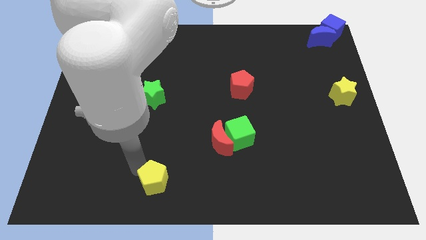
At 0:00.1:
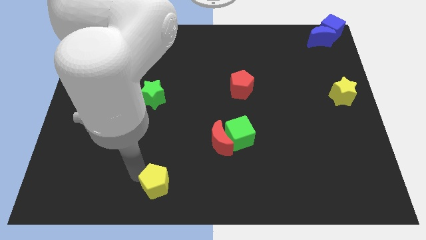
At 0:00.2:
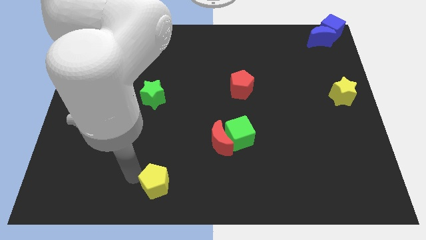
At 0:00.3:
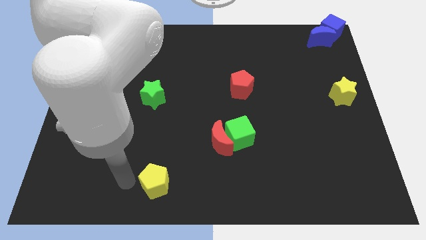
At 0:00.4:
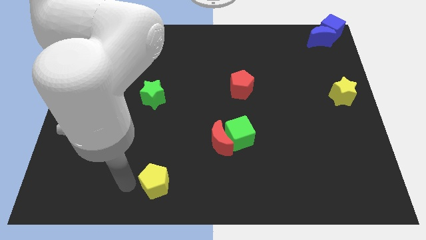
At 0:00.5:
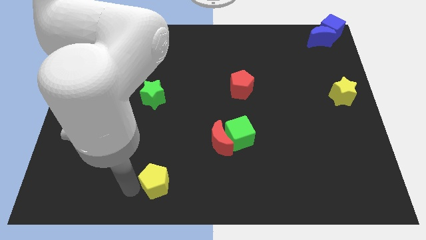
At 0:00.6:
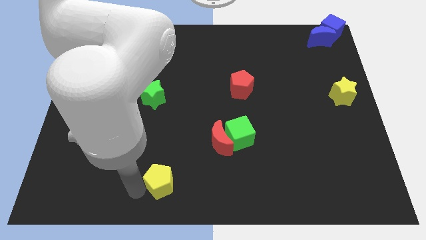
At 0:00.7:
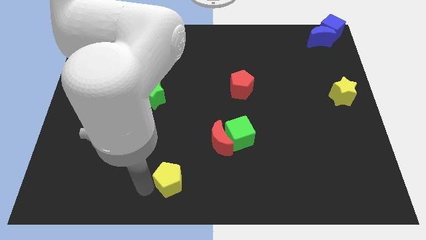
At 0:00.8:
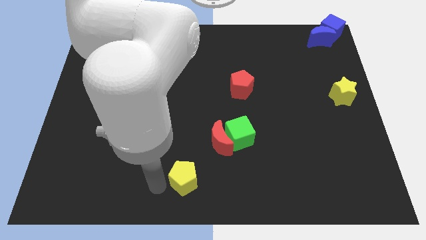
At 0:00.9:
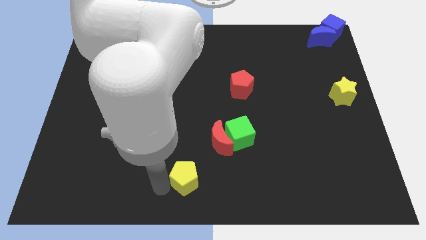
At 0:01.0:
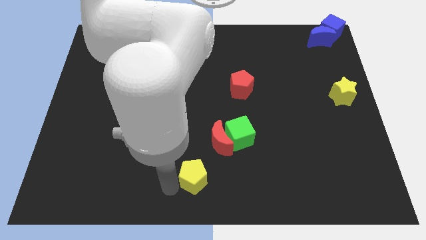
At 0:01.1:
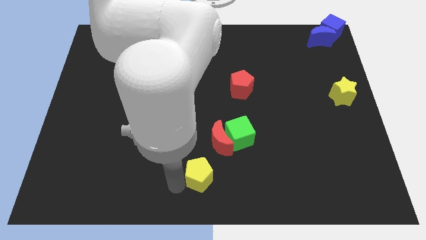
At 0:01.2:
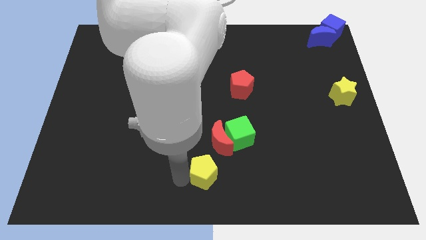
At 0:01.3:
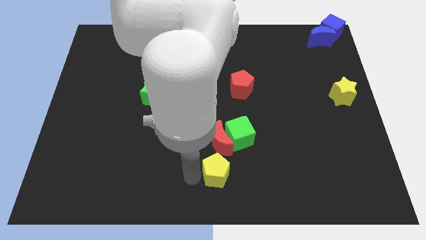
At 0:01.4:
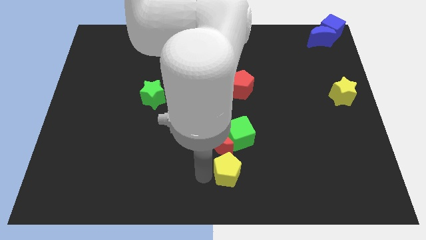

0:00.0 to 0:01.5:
slide the yellow pentagon vertically below the red moon

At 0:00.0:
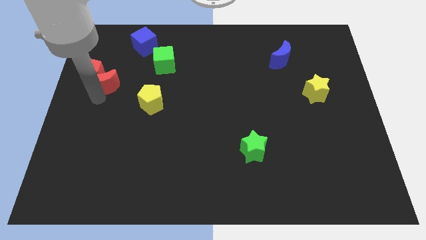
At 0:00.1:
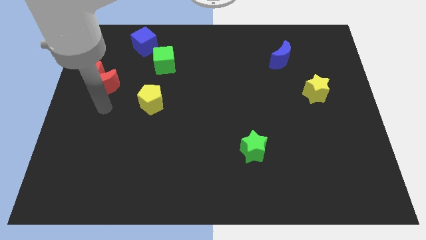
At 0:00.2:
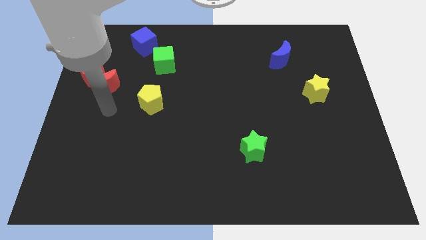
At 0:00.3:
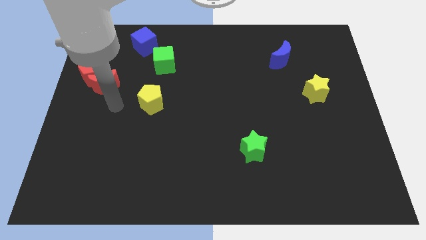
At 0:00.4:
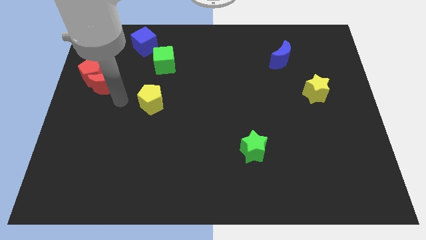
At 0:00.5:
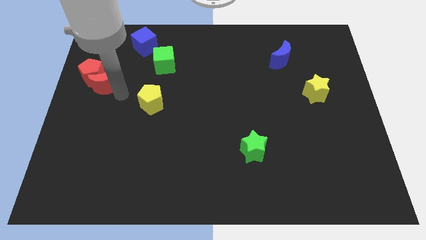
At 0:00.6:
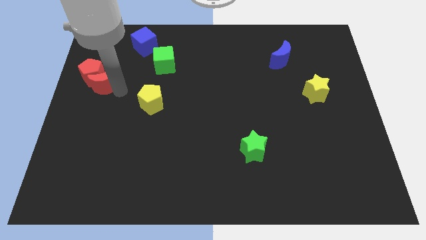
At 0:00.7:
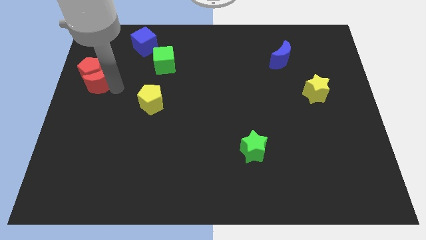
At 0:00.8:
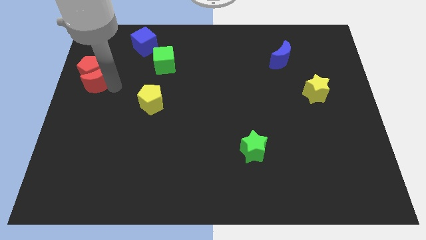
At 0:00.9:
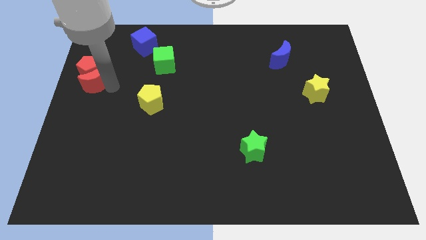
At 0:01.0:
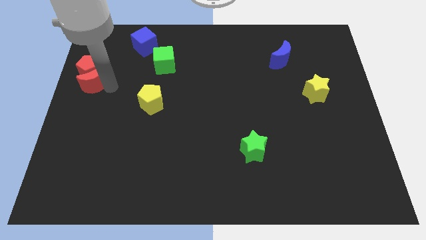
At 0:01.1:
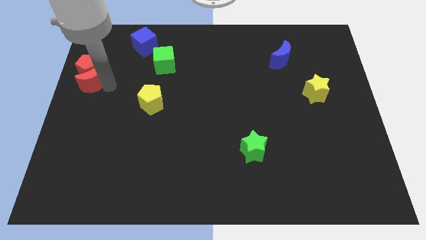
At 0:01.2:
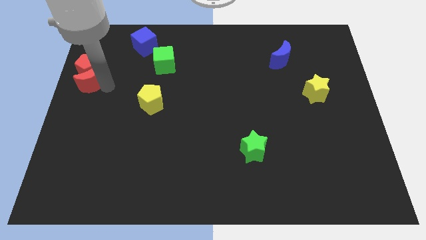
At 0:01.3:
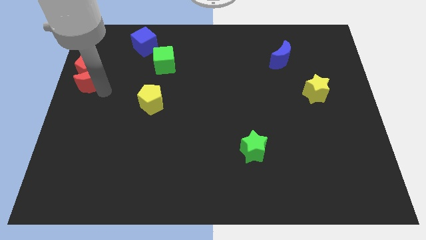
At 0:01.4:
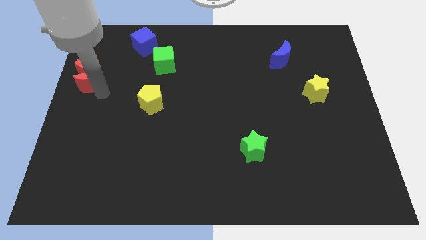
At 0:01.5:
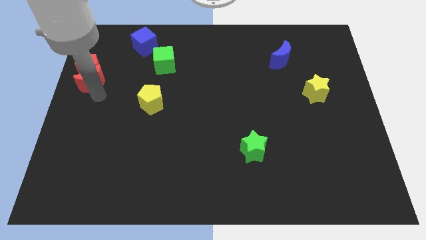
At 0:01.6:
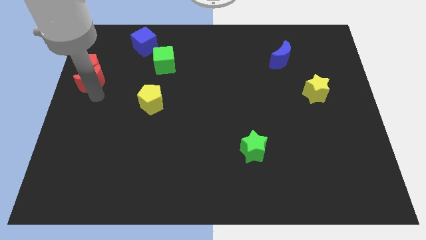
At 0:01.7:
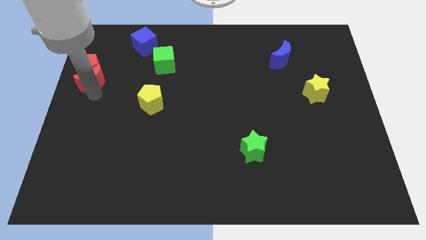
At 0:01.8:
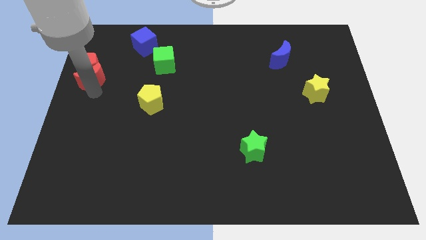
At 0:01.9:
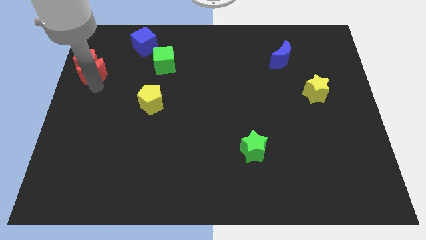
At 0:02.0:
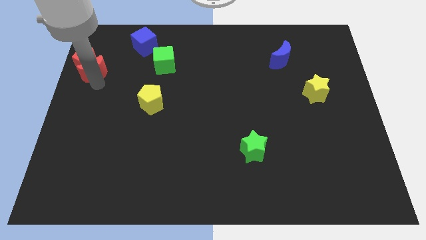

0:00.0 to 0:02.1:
move red moon and the red pentagon towards top left

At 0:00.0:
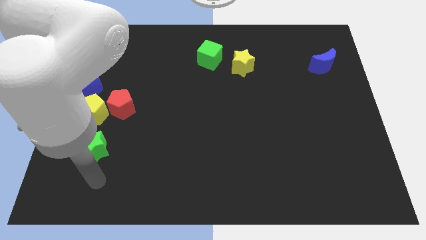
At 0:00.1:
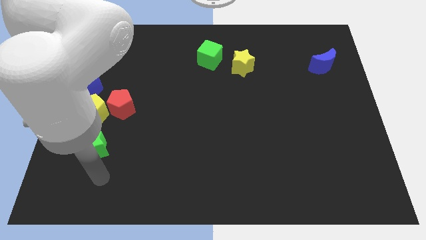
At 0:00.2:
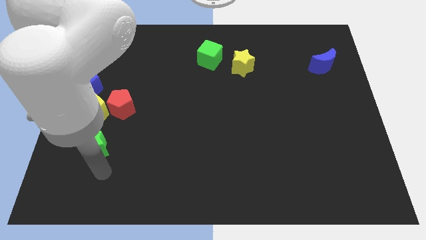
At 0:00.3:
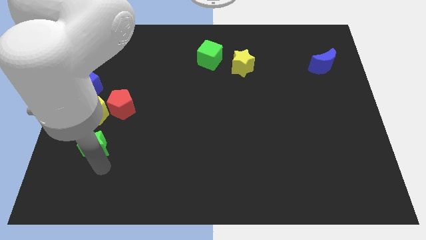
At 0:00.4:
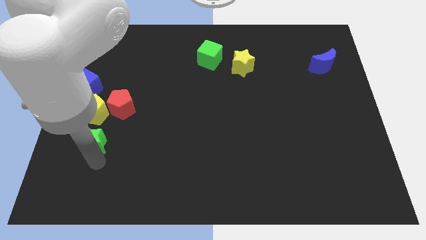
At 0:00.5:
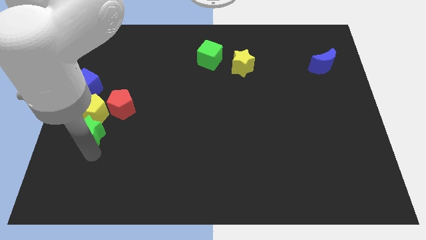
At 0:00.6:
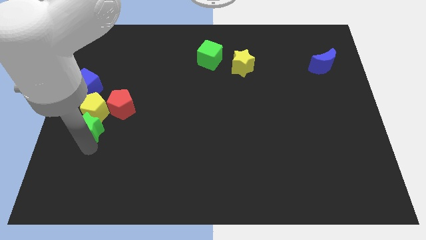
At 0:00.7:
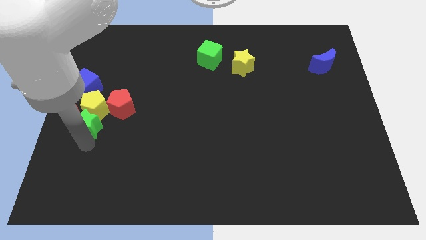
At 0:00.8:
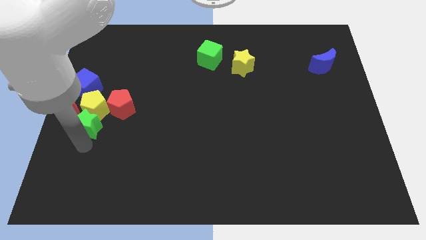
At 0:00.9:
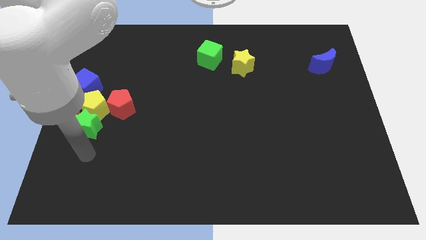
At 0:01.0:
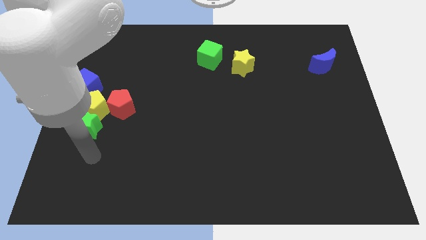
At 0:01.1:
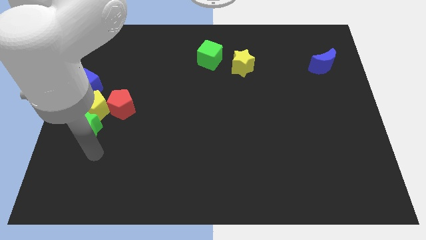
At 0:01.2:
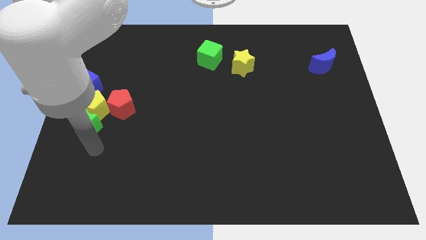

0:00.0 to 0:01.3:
push the green star into the yellow pentagon

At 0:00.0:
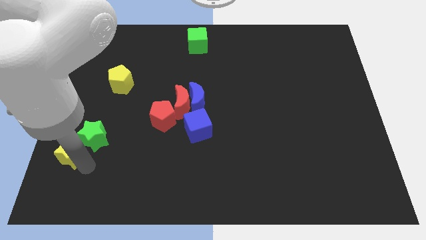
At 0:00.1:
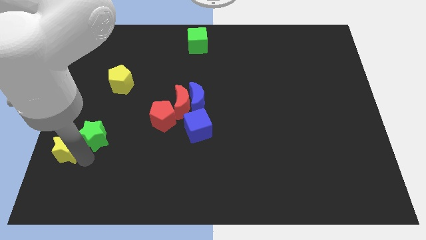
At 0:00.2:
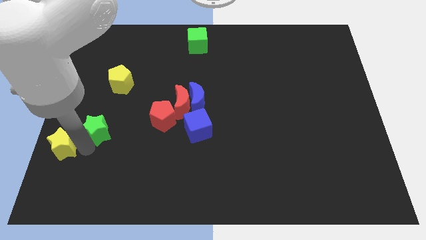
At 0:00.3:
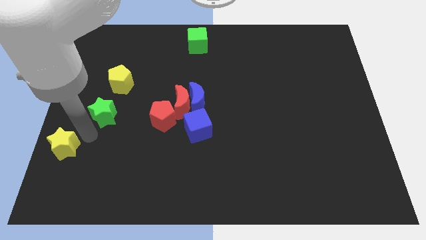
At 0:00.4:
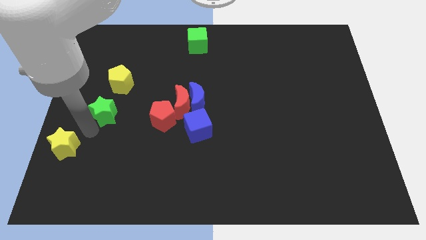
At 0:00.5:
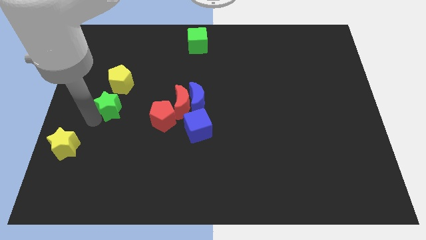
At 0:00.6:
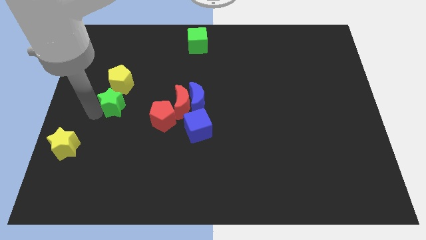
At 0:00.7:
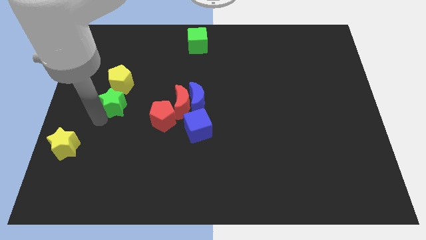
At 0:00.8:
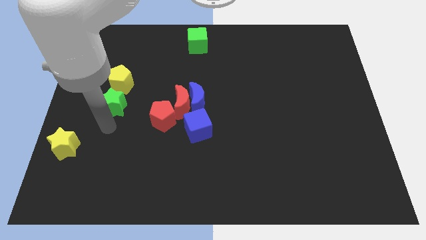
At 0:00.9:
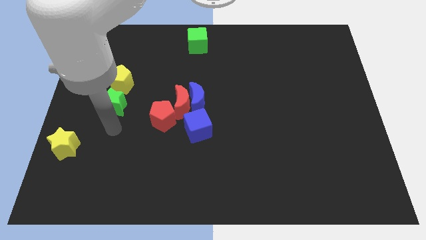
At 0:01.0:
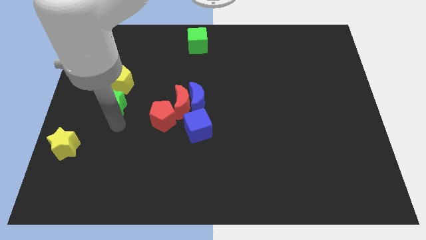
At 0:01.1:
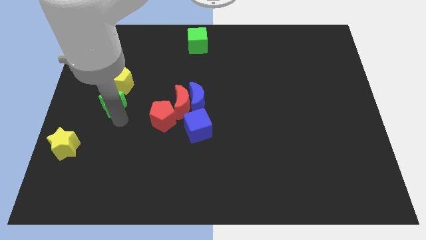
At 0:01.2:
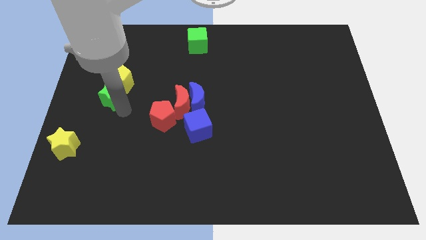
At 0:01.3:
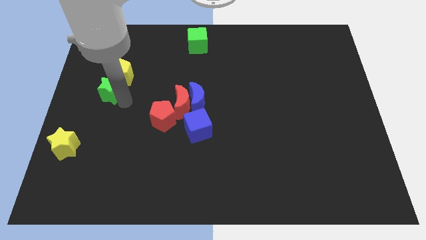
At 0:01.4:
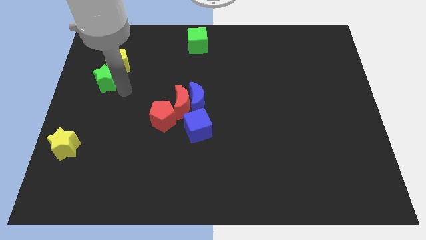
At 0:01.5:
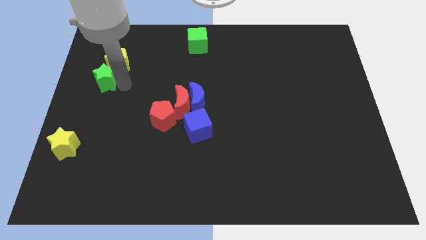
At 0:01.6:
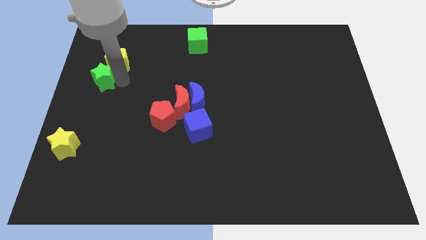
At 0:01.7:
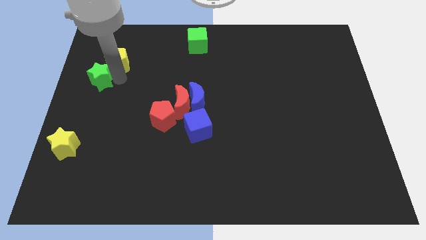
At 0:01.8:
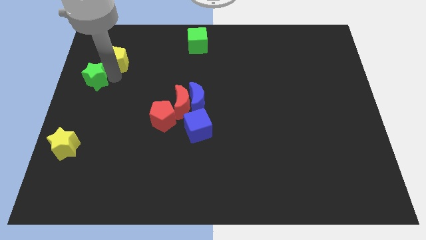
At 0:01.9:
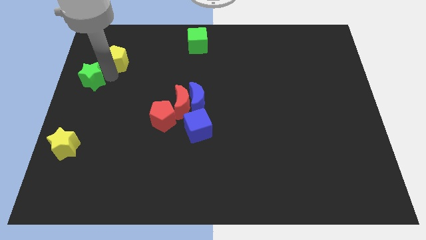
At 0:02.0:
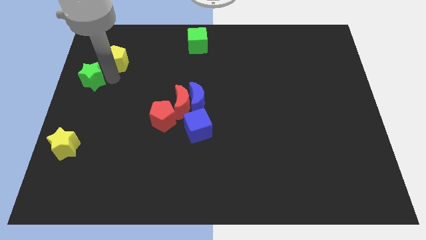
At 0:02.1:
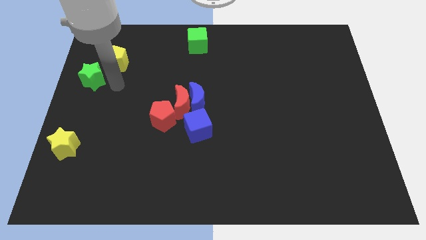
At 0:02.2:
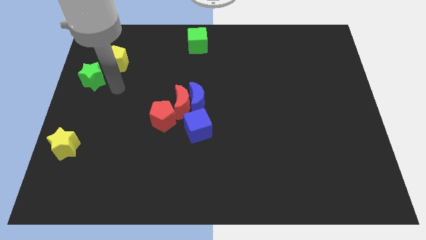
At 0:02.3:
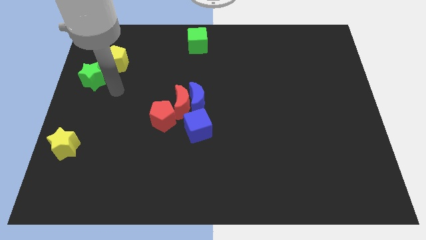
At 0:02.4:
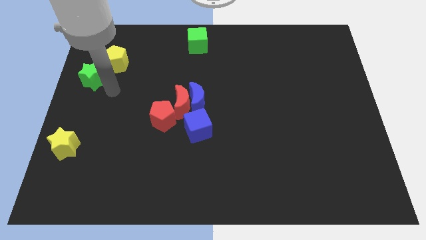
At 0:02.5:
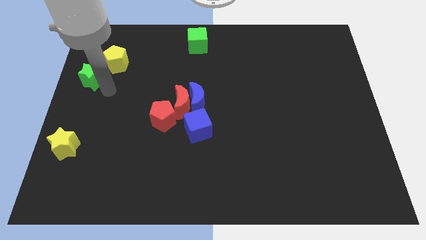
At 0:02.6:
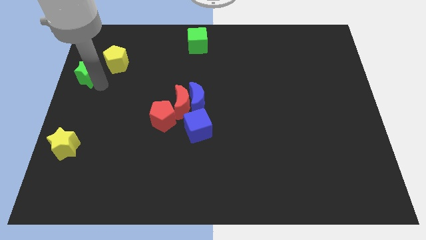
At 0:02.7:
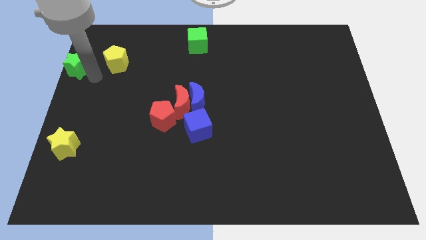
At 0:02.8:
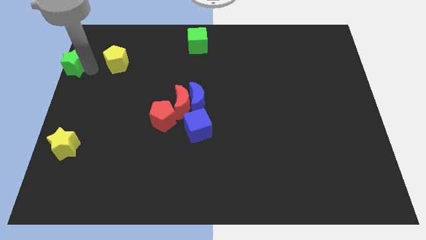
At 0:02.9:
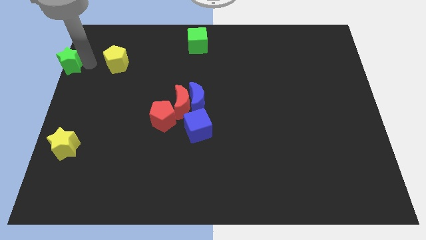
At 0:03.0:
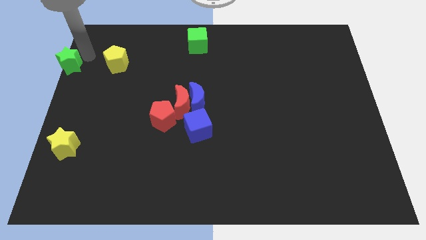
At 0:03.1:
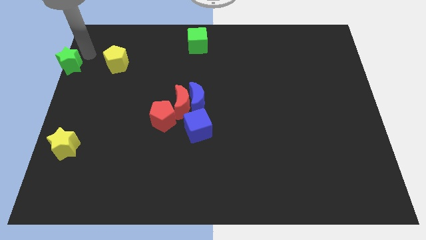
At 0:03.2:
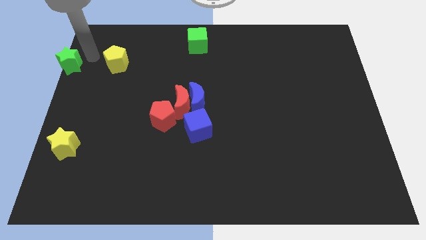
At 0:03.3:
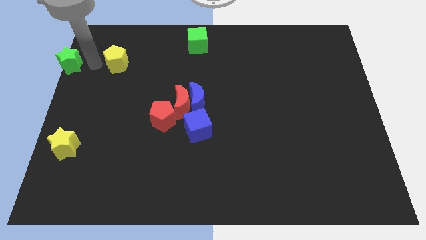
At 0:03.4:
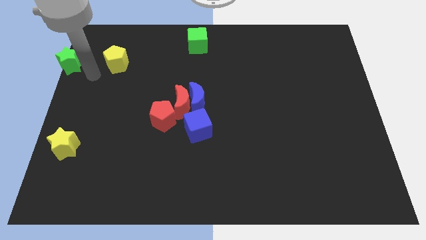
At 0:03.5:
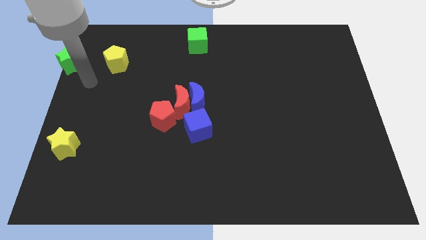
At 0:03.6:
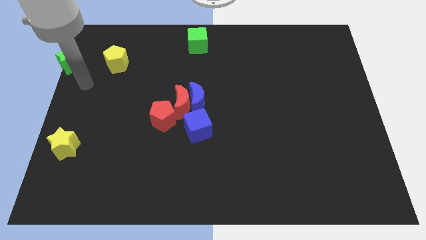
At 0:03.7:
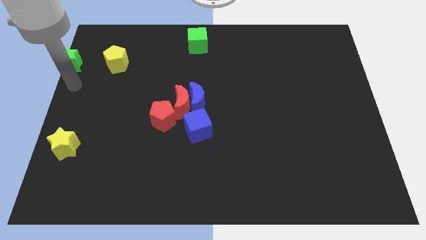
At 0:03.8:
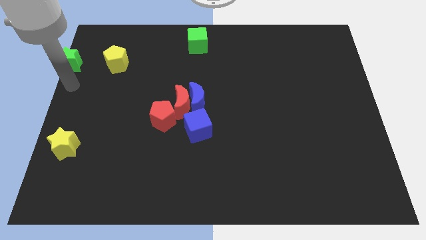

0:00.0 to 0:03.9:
move the green star to the top left of the board

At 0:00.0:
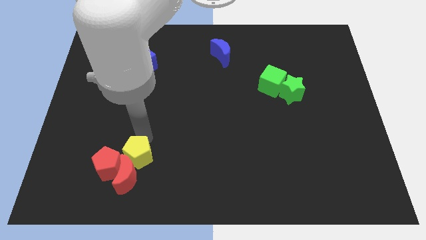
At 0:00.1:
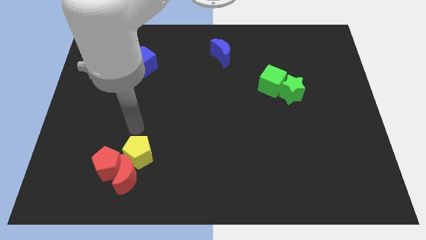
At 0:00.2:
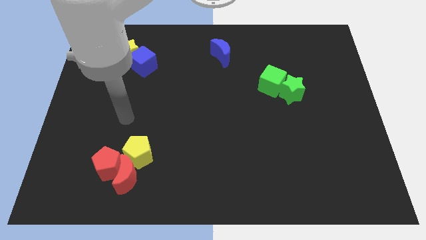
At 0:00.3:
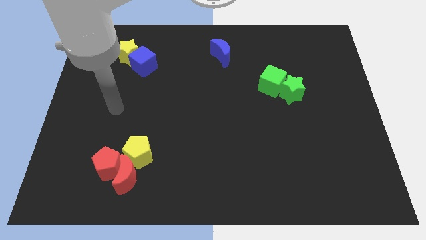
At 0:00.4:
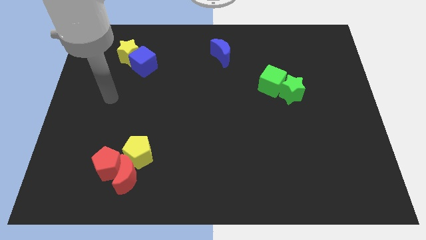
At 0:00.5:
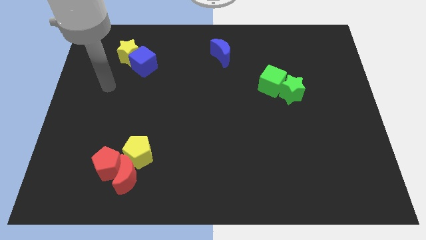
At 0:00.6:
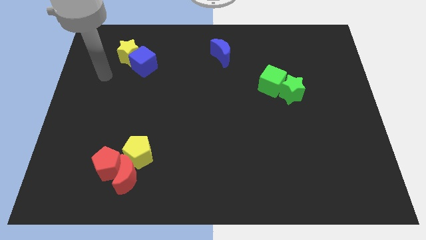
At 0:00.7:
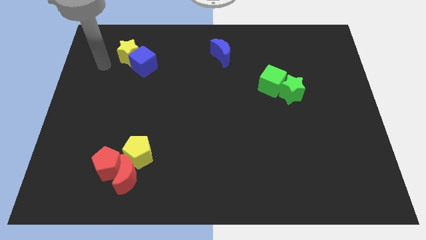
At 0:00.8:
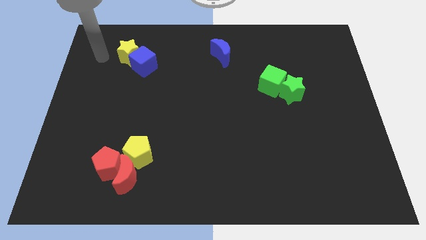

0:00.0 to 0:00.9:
point your arm to the left side of yellow star
